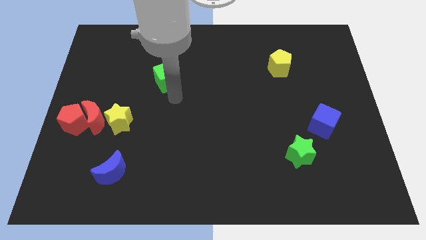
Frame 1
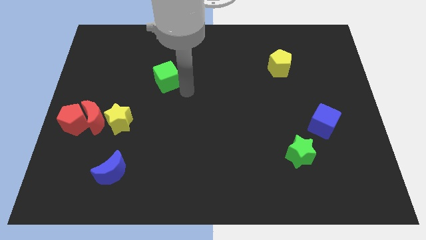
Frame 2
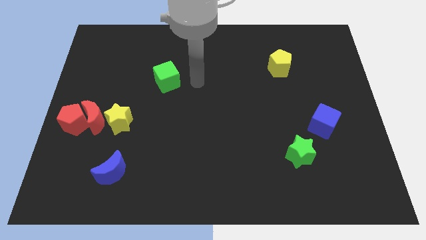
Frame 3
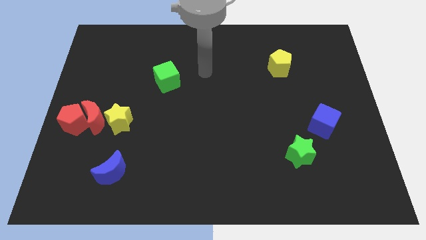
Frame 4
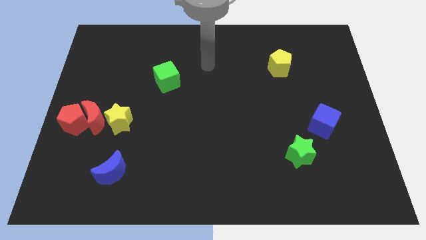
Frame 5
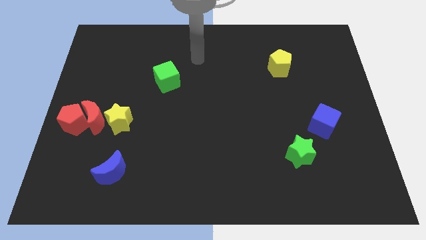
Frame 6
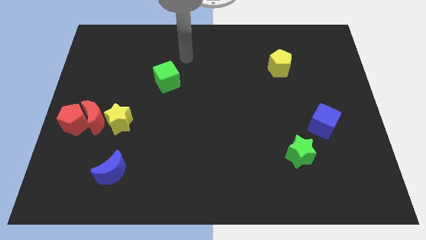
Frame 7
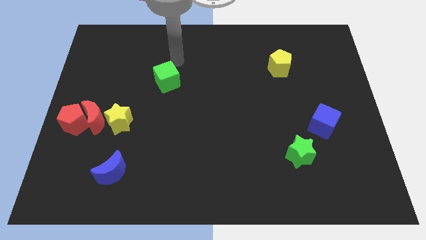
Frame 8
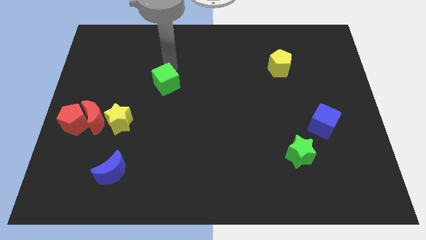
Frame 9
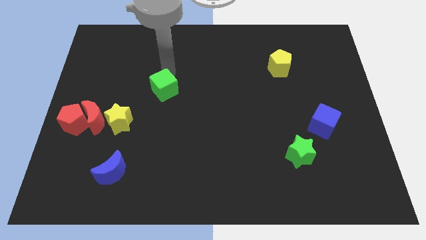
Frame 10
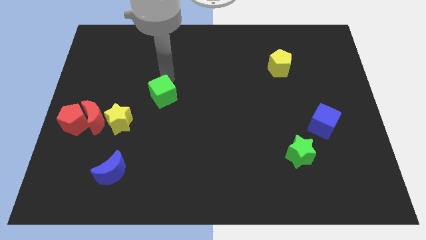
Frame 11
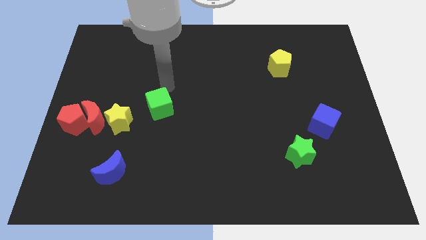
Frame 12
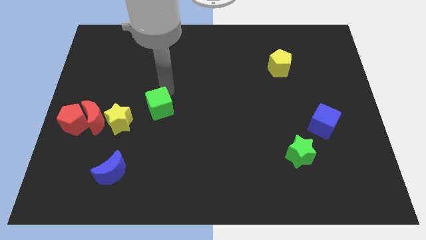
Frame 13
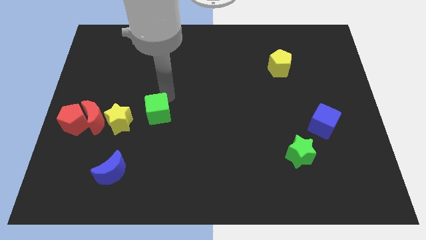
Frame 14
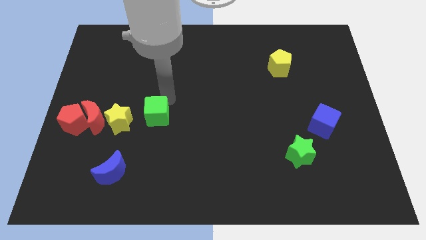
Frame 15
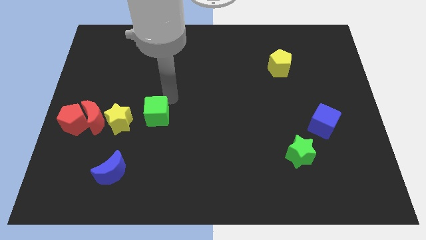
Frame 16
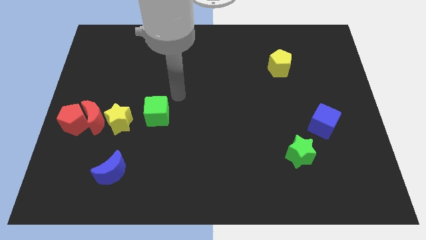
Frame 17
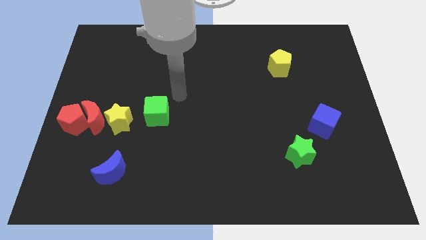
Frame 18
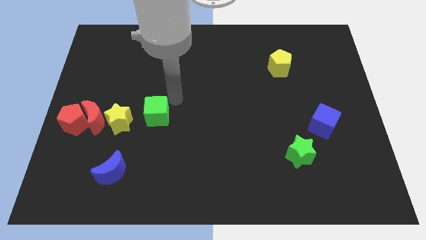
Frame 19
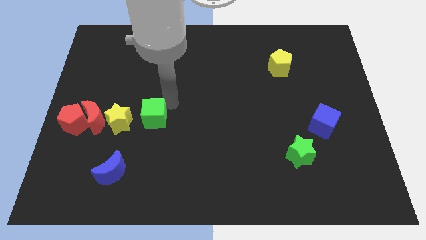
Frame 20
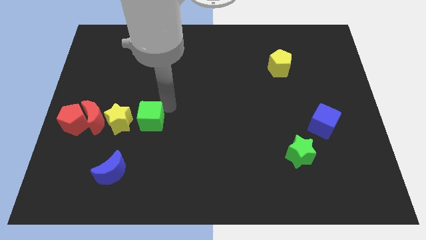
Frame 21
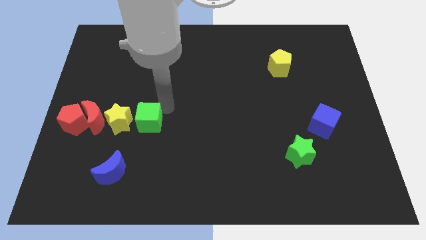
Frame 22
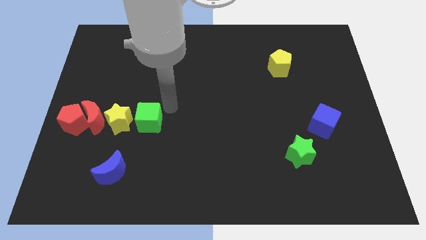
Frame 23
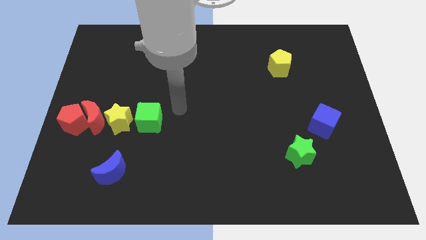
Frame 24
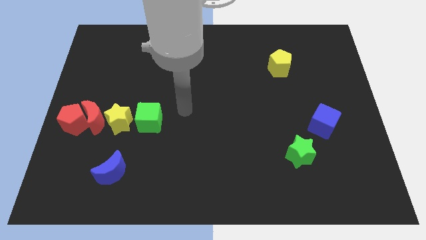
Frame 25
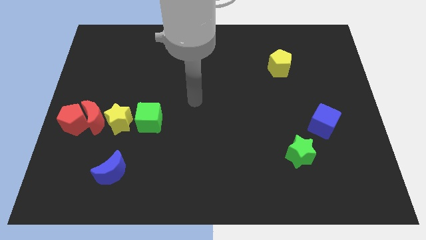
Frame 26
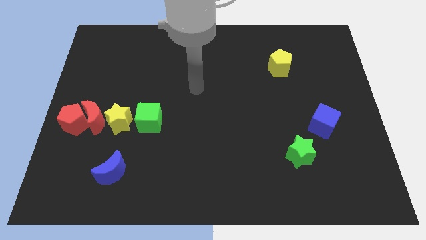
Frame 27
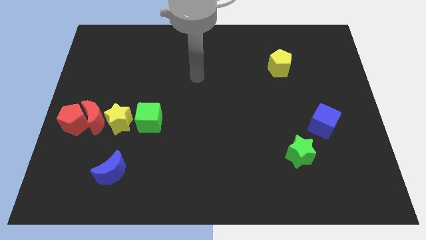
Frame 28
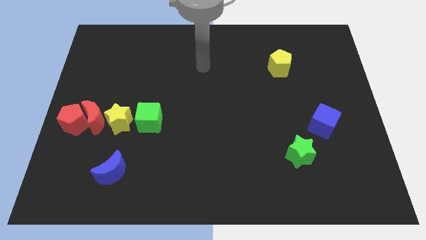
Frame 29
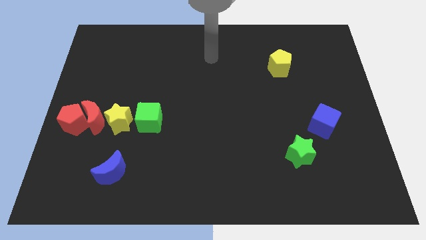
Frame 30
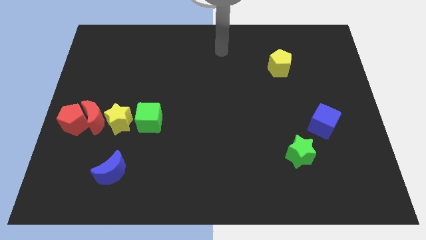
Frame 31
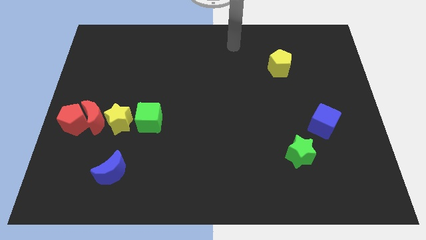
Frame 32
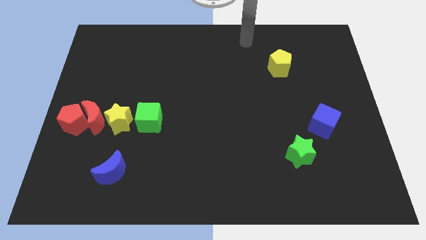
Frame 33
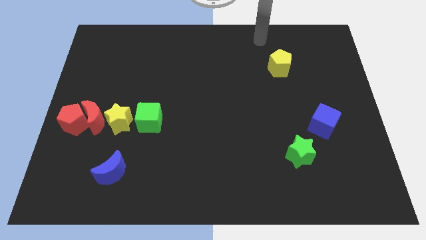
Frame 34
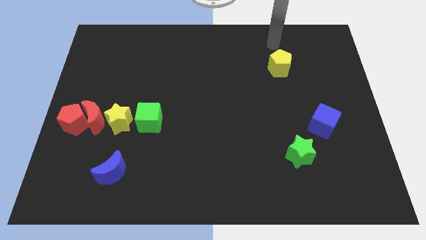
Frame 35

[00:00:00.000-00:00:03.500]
put the green cube to the right side of the yellow star

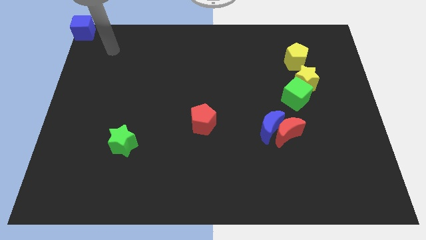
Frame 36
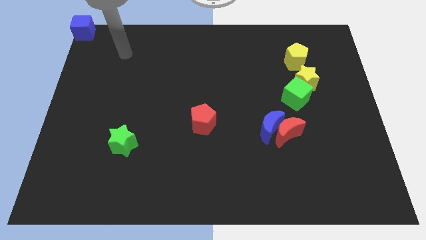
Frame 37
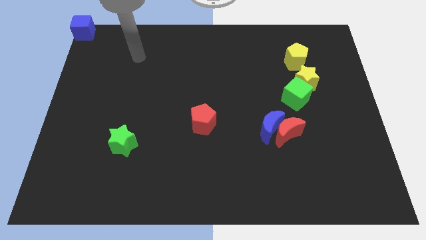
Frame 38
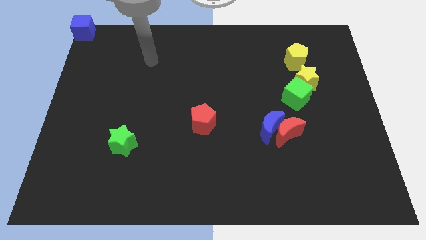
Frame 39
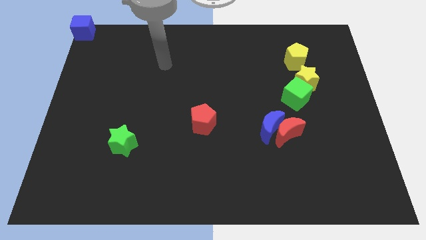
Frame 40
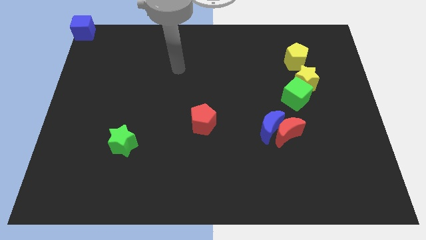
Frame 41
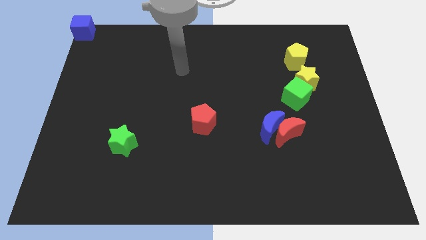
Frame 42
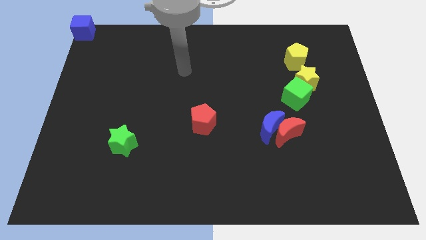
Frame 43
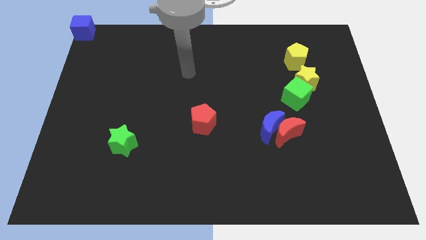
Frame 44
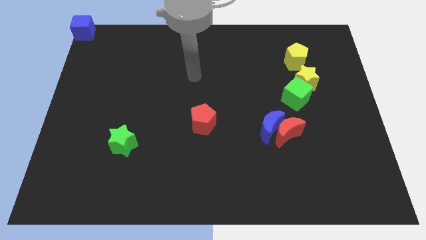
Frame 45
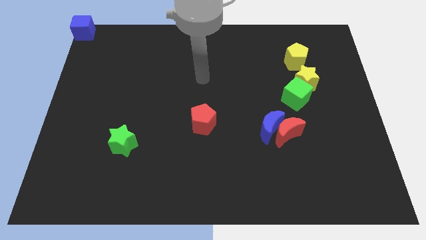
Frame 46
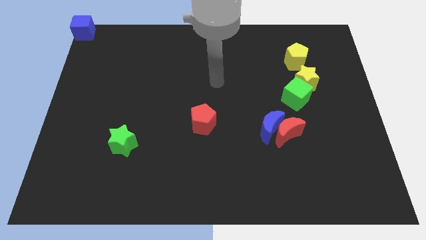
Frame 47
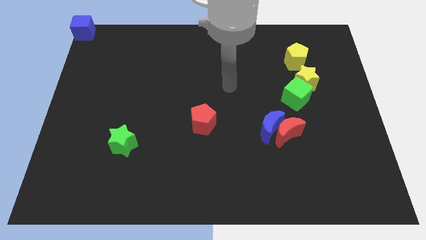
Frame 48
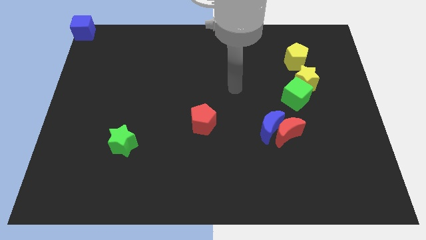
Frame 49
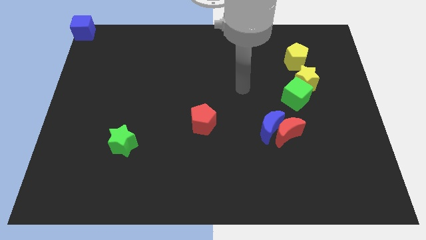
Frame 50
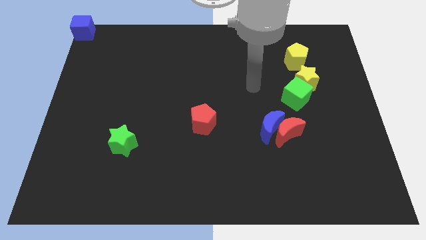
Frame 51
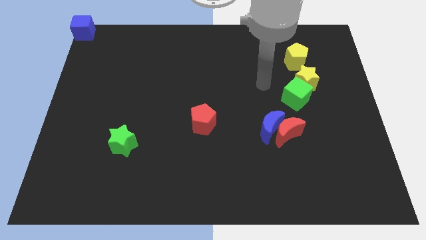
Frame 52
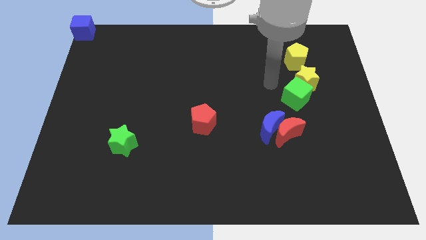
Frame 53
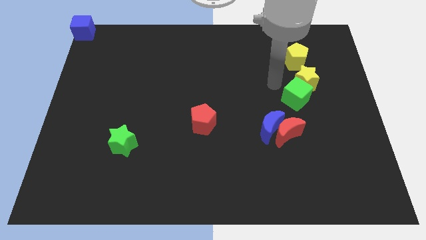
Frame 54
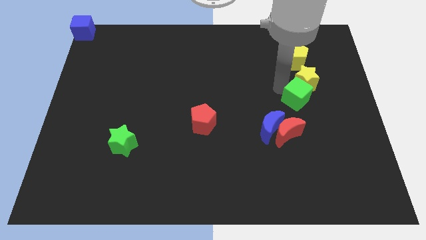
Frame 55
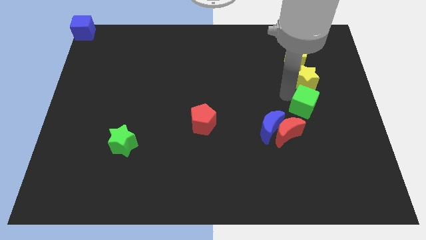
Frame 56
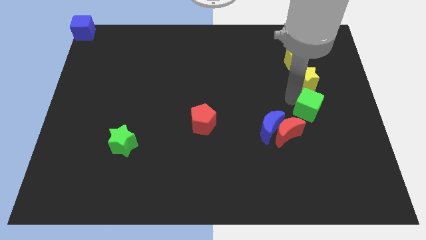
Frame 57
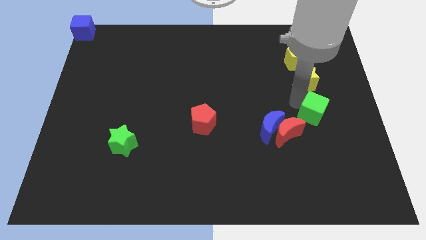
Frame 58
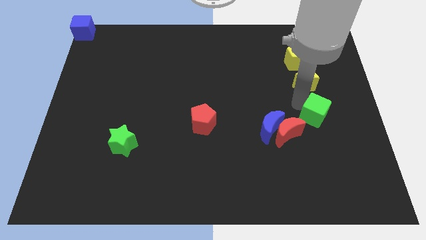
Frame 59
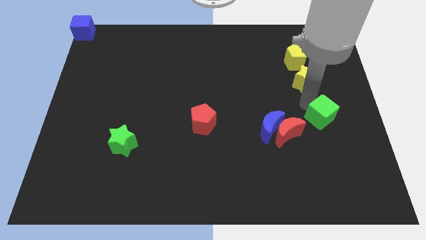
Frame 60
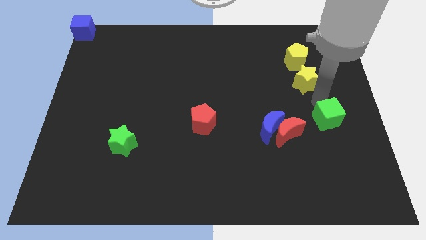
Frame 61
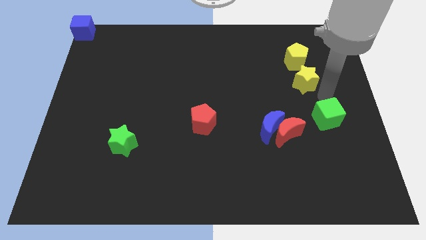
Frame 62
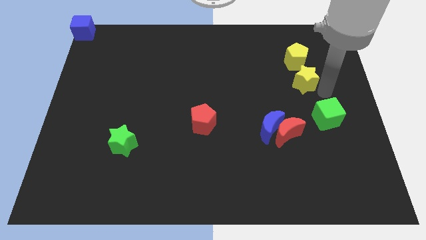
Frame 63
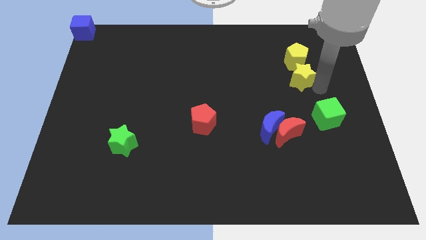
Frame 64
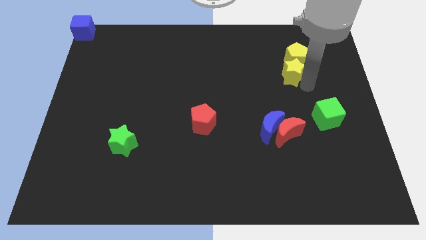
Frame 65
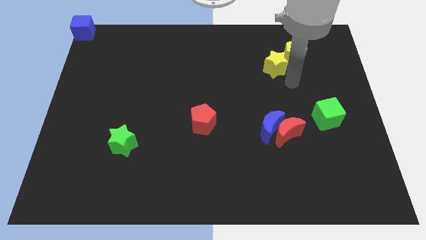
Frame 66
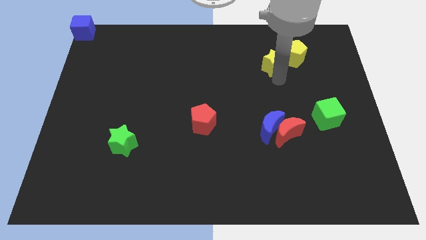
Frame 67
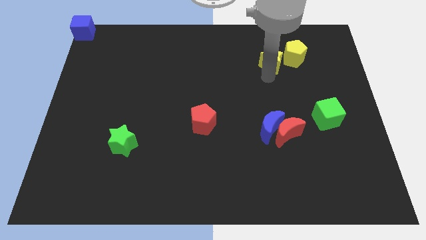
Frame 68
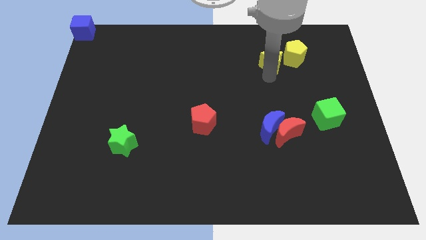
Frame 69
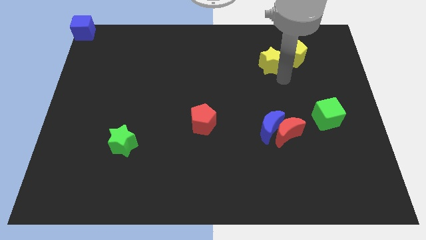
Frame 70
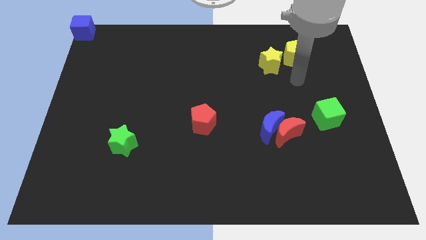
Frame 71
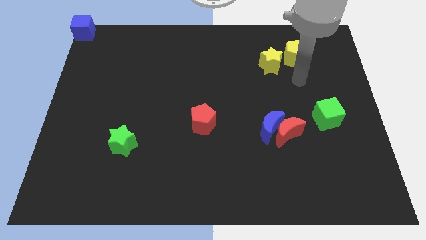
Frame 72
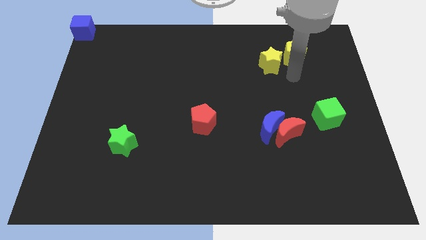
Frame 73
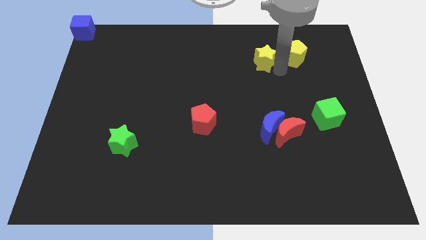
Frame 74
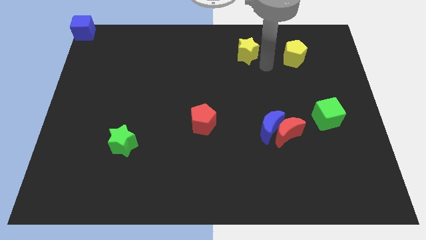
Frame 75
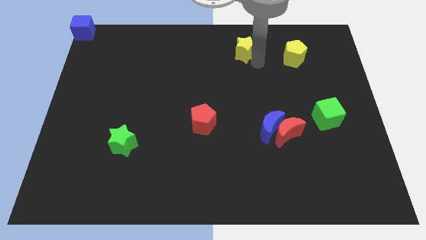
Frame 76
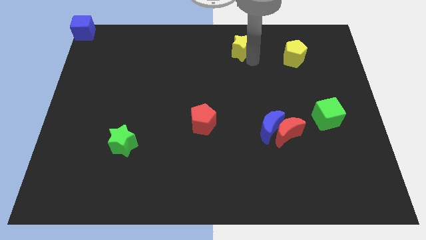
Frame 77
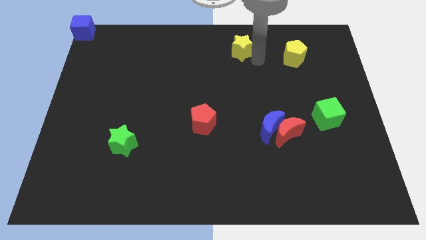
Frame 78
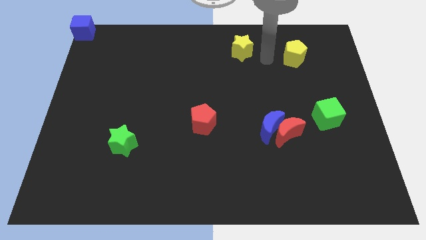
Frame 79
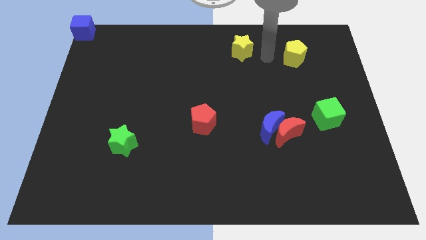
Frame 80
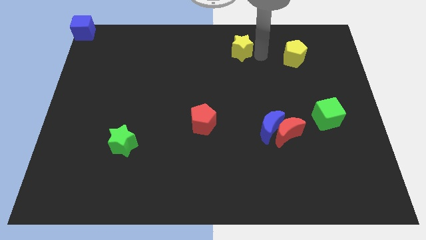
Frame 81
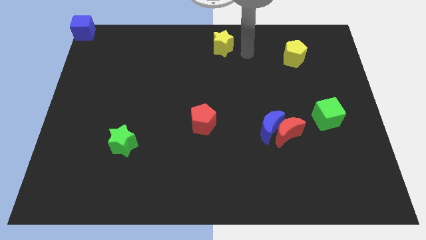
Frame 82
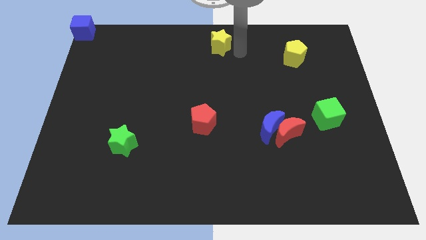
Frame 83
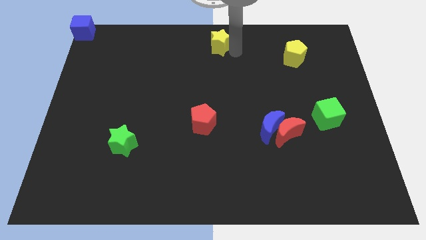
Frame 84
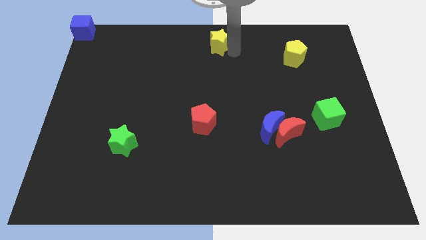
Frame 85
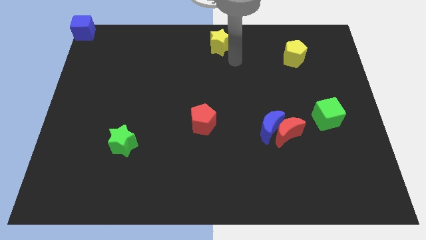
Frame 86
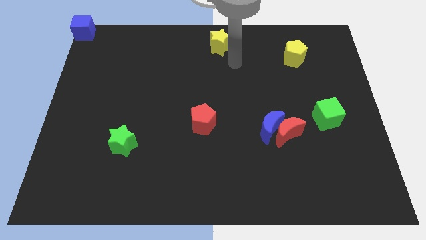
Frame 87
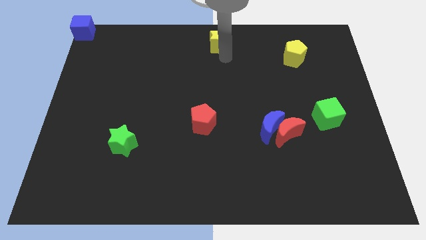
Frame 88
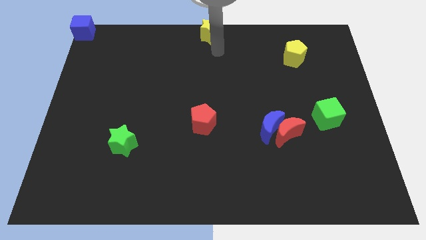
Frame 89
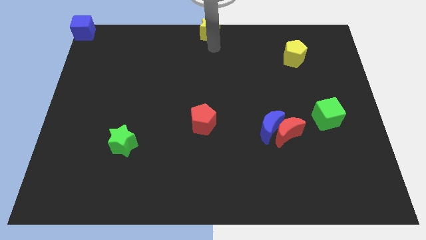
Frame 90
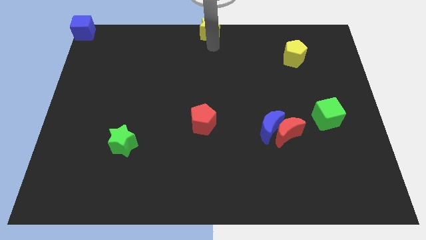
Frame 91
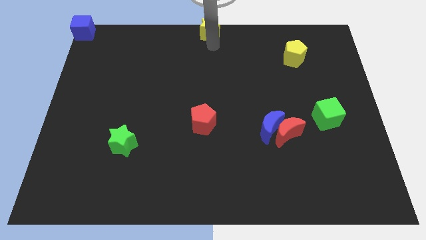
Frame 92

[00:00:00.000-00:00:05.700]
move the yellow star to the top center of the board
